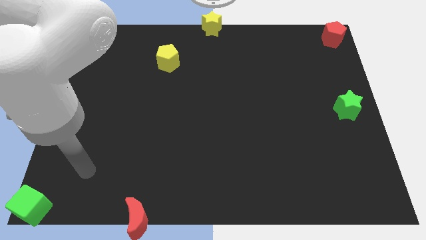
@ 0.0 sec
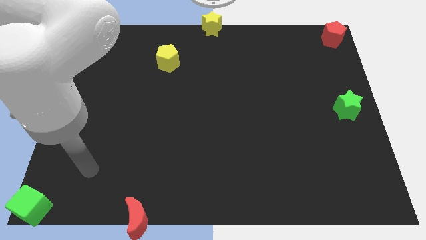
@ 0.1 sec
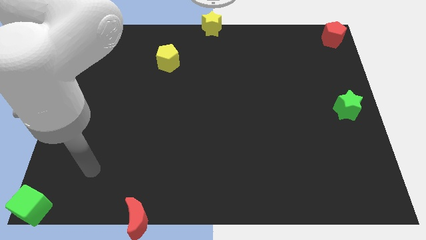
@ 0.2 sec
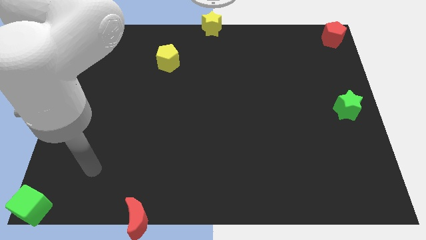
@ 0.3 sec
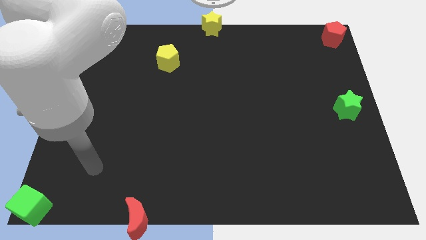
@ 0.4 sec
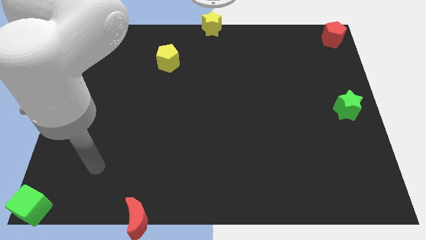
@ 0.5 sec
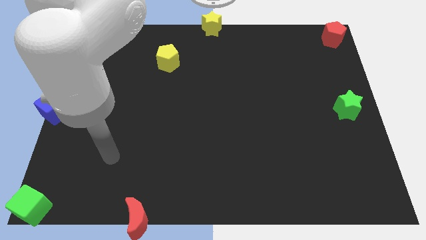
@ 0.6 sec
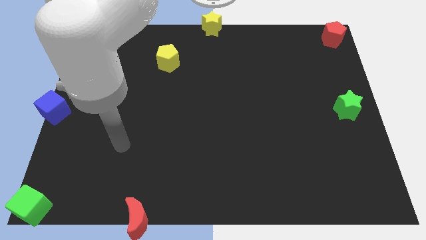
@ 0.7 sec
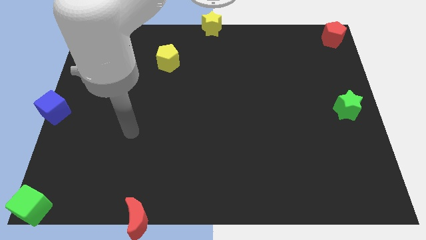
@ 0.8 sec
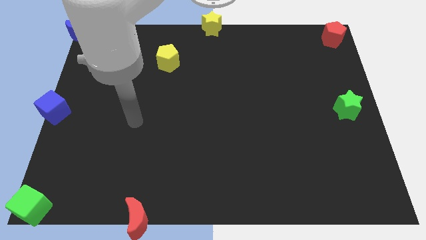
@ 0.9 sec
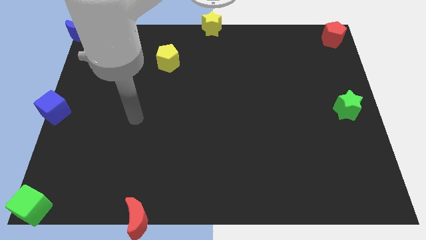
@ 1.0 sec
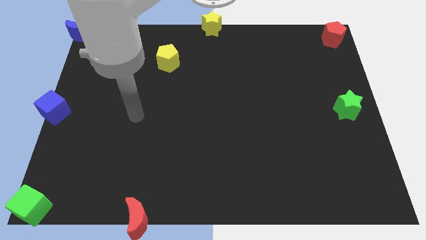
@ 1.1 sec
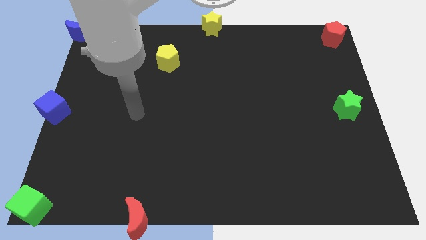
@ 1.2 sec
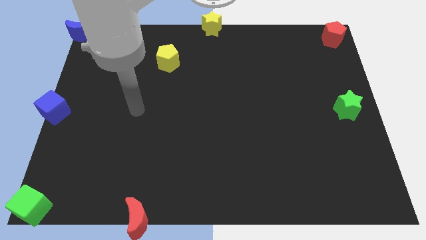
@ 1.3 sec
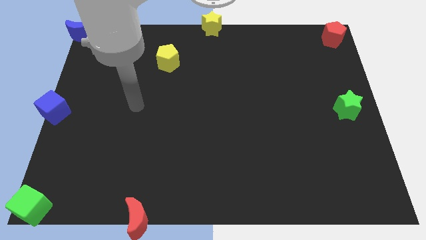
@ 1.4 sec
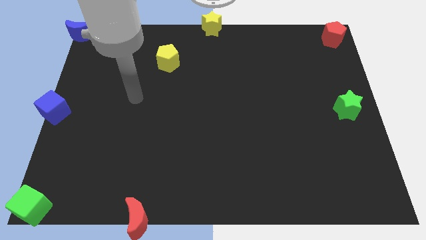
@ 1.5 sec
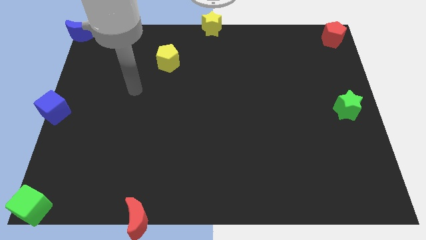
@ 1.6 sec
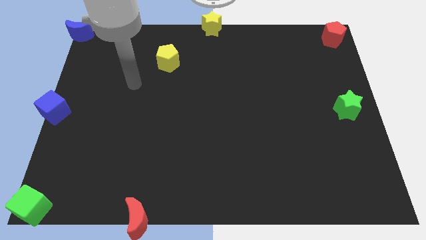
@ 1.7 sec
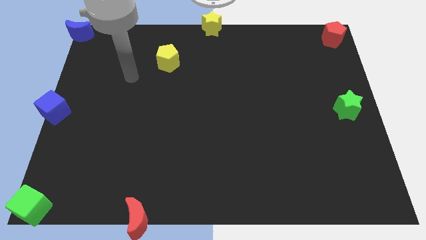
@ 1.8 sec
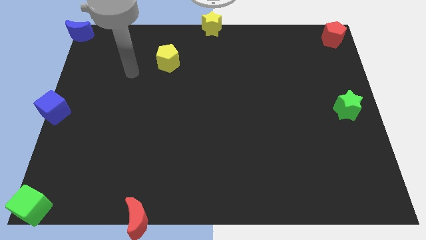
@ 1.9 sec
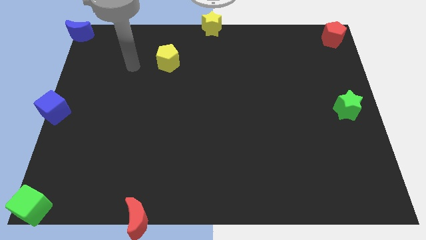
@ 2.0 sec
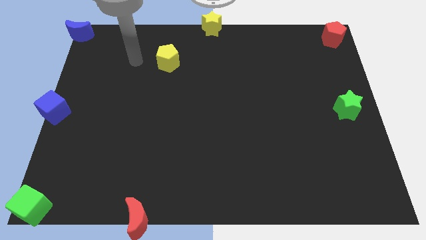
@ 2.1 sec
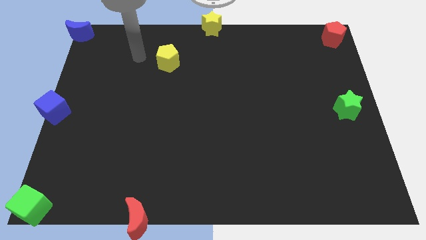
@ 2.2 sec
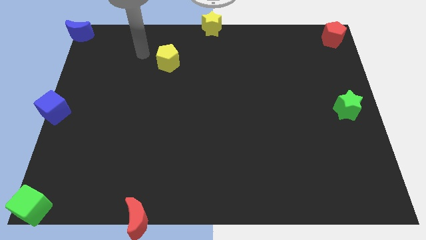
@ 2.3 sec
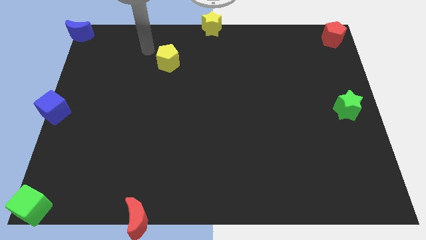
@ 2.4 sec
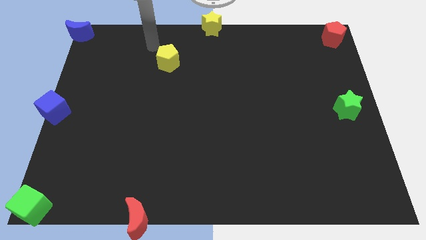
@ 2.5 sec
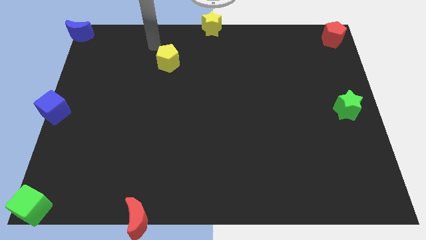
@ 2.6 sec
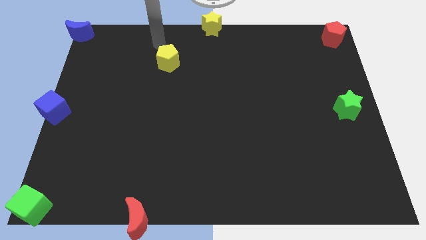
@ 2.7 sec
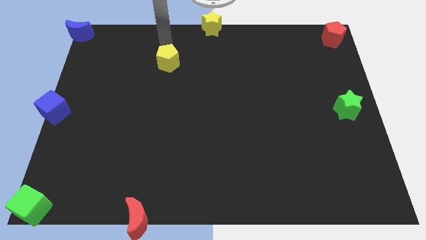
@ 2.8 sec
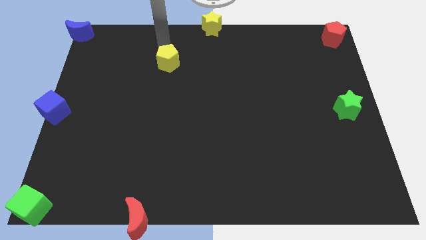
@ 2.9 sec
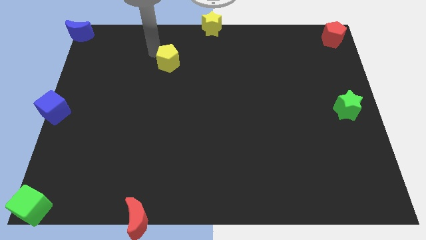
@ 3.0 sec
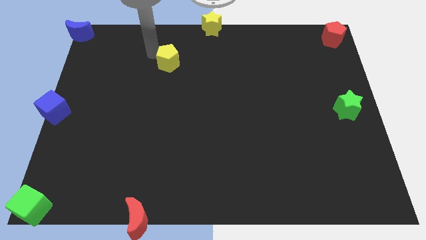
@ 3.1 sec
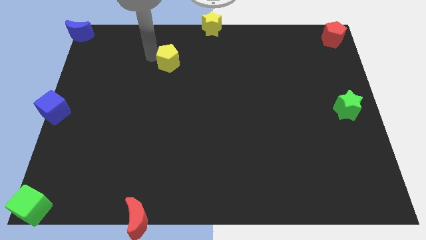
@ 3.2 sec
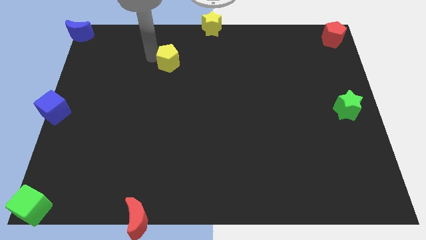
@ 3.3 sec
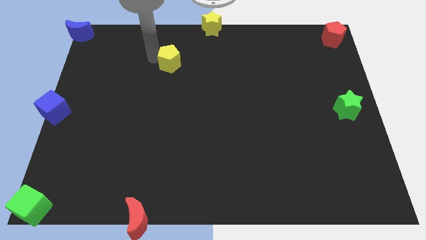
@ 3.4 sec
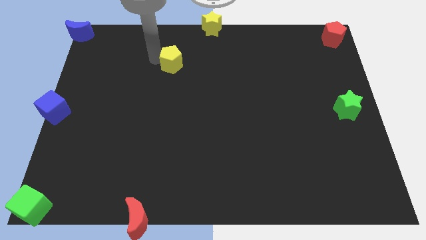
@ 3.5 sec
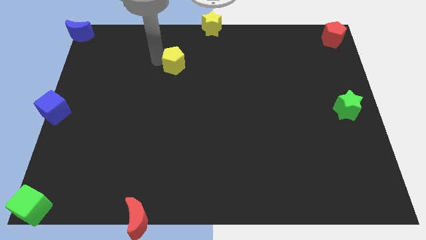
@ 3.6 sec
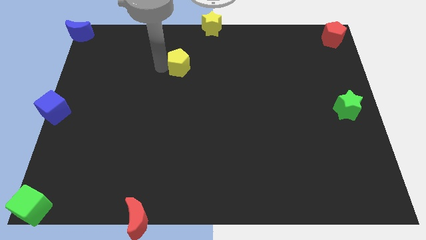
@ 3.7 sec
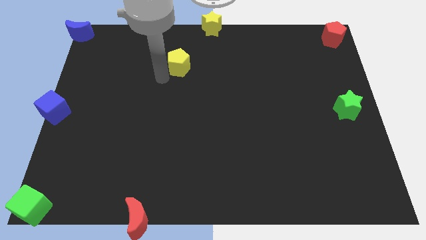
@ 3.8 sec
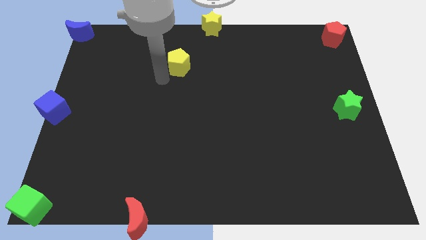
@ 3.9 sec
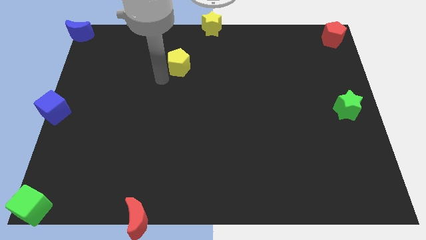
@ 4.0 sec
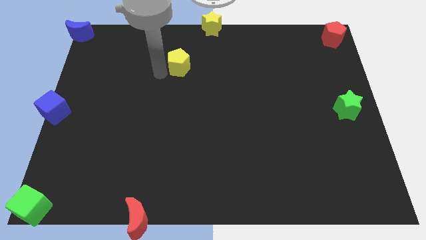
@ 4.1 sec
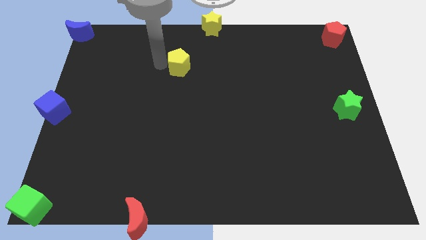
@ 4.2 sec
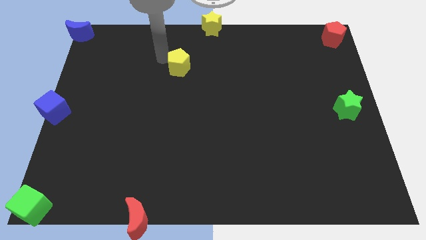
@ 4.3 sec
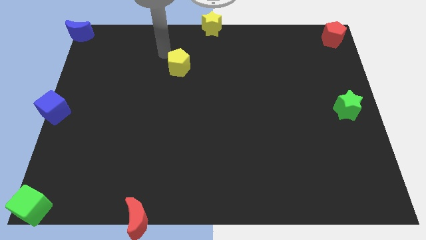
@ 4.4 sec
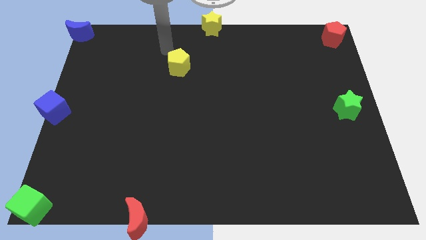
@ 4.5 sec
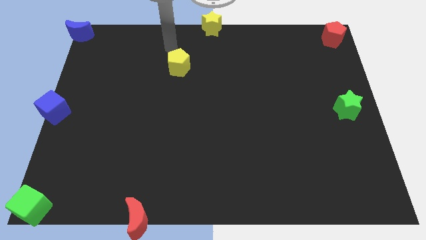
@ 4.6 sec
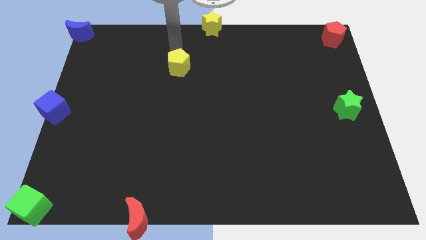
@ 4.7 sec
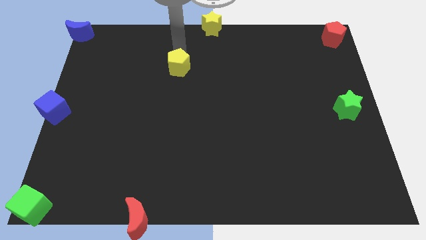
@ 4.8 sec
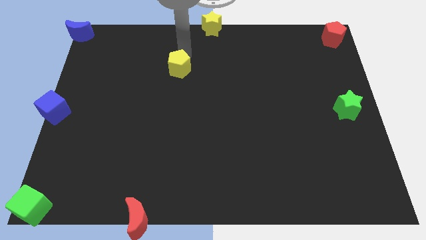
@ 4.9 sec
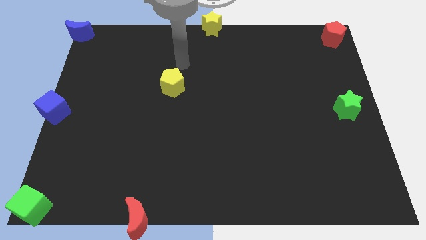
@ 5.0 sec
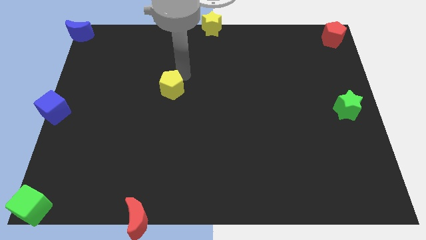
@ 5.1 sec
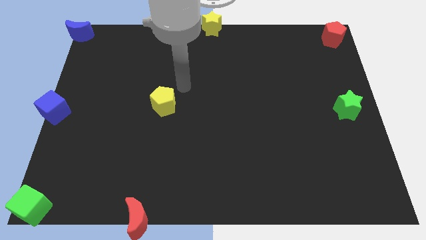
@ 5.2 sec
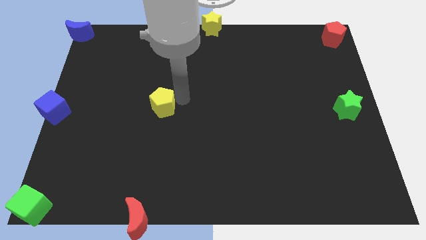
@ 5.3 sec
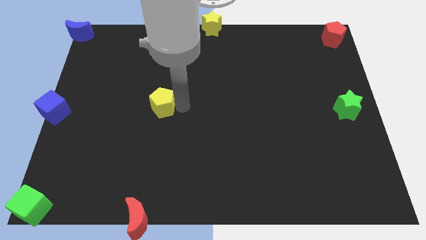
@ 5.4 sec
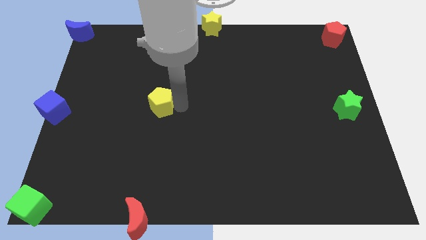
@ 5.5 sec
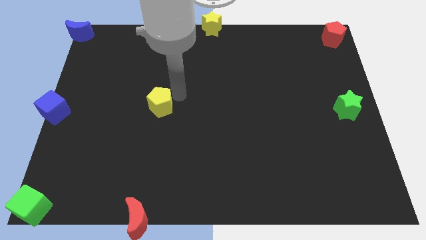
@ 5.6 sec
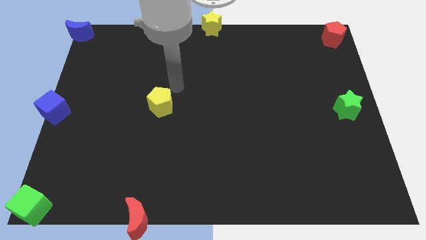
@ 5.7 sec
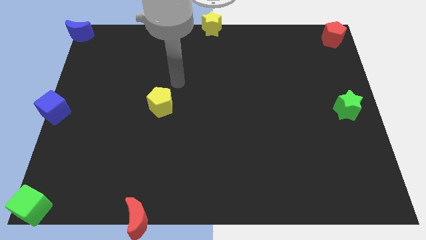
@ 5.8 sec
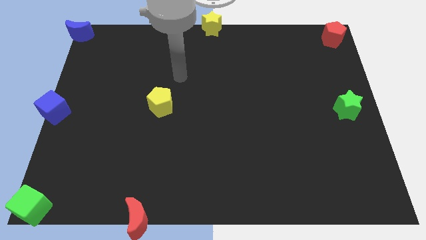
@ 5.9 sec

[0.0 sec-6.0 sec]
move the yellow pentagon horizontally to the right side of the blue cube

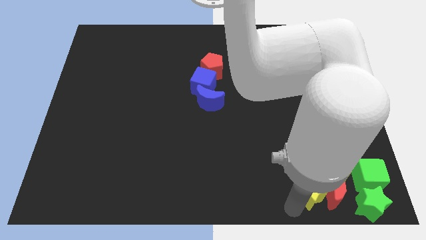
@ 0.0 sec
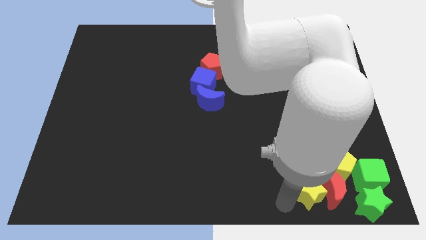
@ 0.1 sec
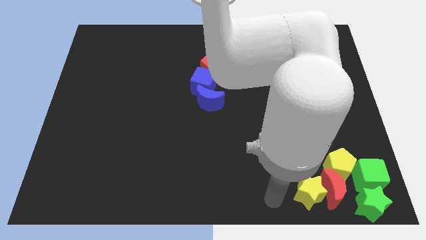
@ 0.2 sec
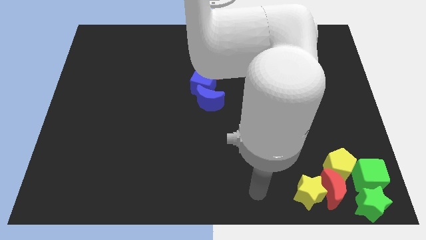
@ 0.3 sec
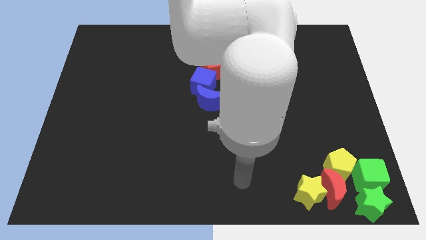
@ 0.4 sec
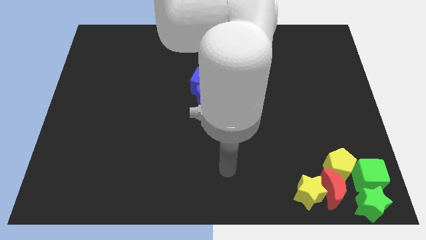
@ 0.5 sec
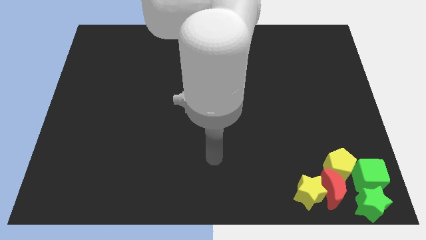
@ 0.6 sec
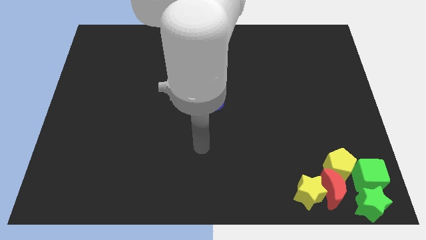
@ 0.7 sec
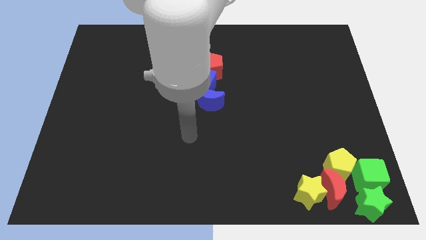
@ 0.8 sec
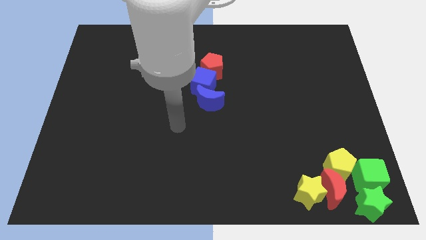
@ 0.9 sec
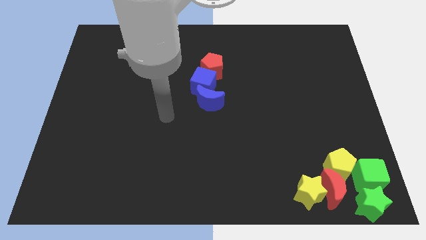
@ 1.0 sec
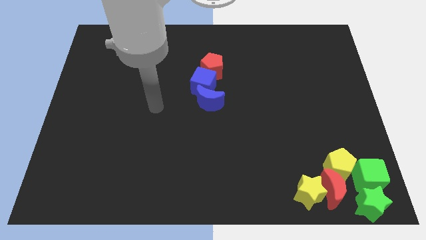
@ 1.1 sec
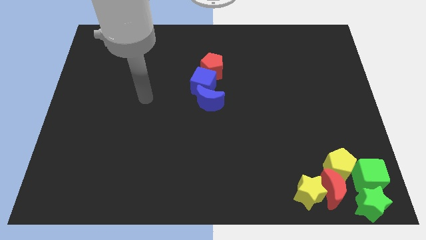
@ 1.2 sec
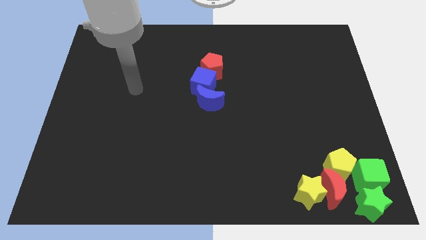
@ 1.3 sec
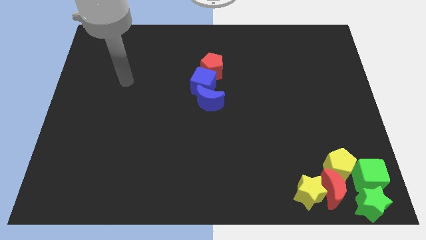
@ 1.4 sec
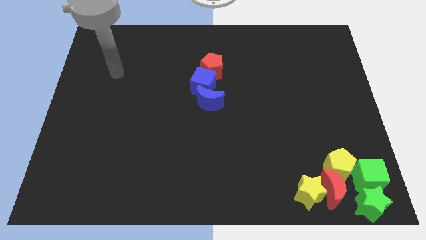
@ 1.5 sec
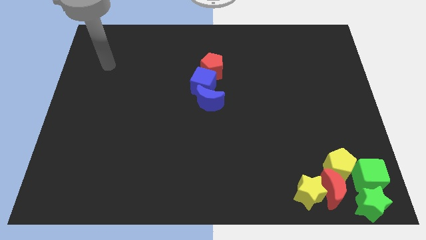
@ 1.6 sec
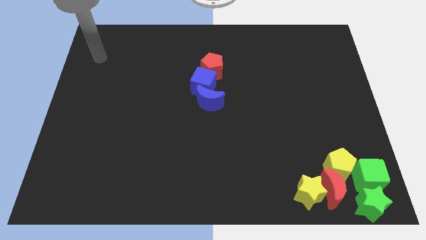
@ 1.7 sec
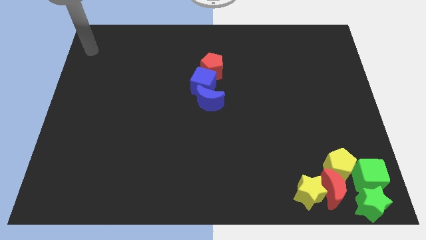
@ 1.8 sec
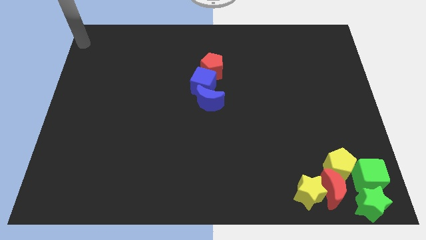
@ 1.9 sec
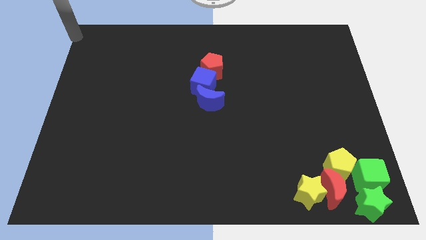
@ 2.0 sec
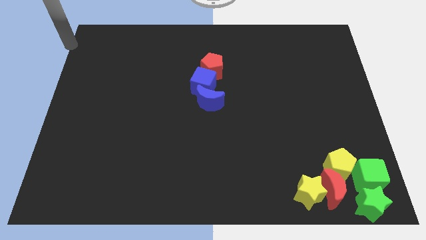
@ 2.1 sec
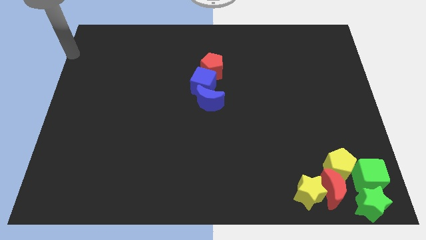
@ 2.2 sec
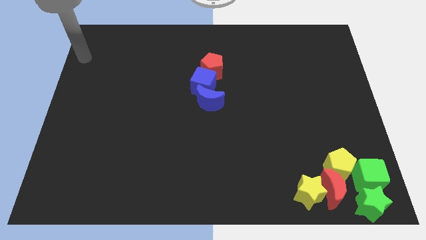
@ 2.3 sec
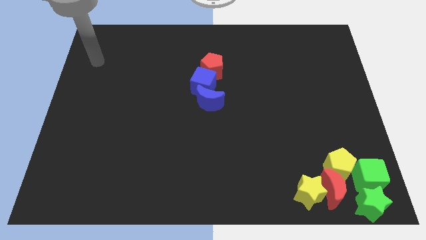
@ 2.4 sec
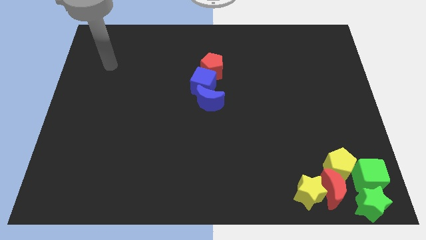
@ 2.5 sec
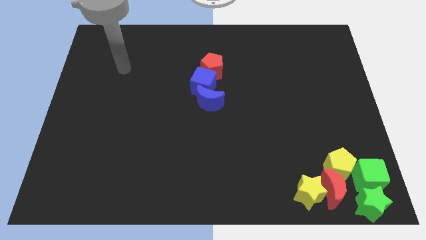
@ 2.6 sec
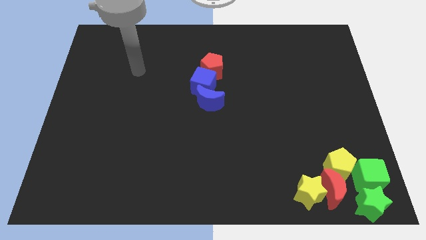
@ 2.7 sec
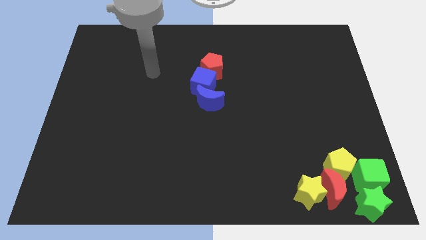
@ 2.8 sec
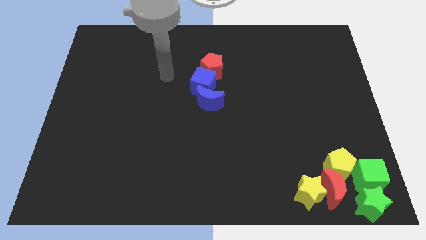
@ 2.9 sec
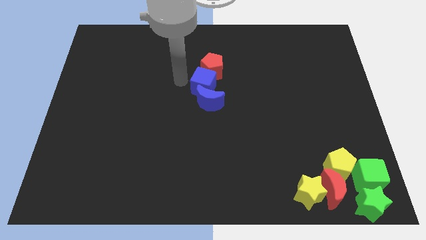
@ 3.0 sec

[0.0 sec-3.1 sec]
move arm near blue cube
